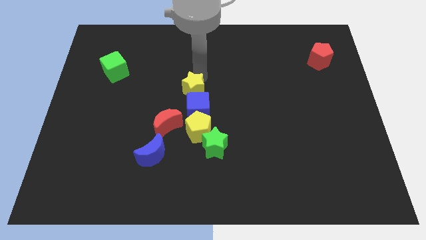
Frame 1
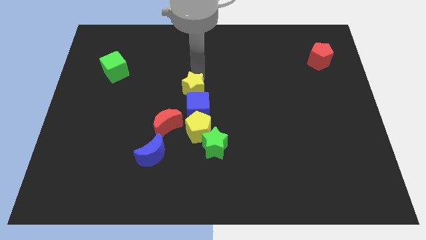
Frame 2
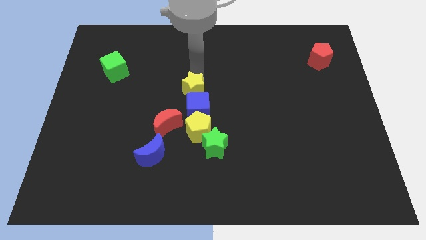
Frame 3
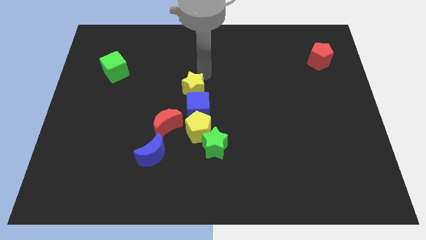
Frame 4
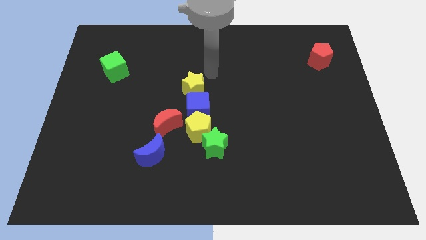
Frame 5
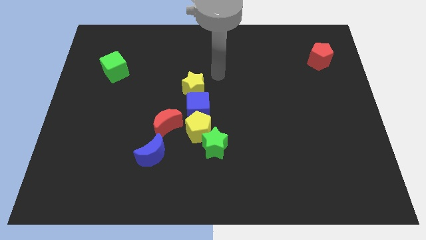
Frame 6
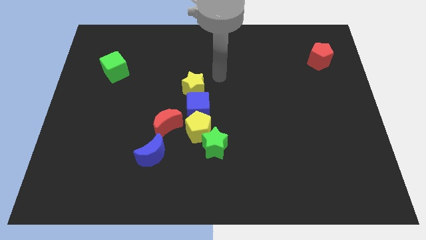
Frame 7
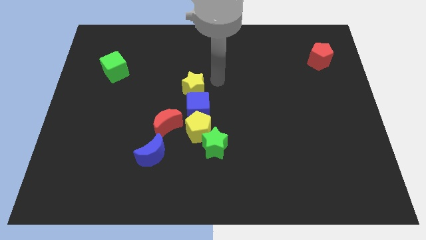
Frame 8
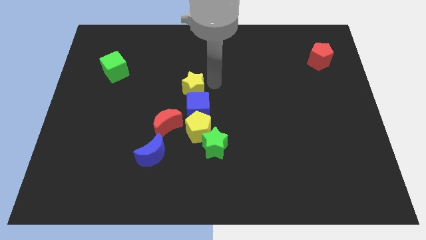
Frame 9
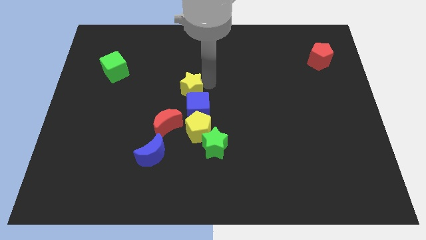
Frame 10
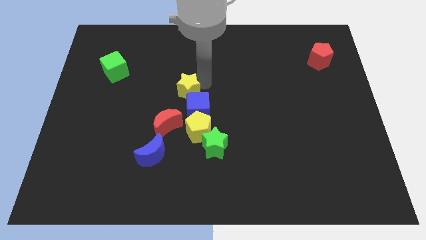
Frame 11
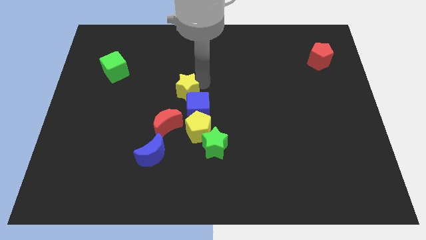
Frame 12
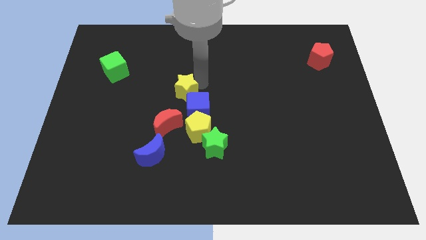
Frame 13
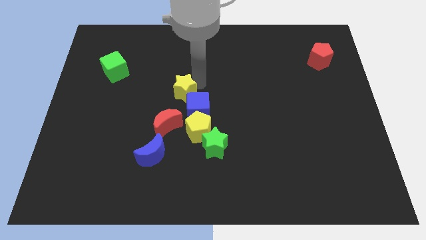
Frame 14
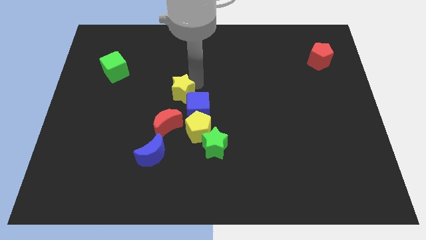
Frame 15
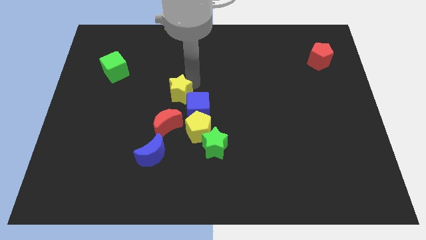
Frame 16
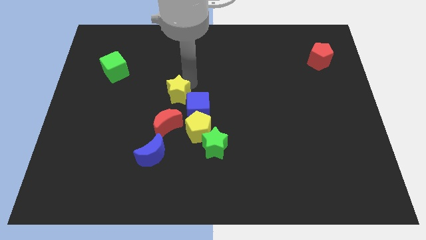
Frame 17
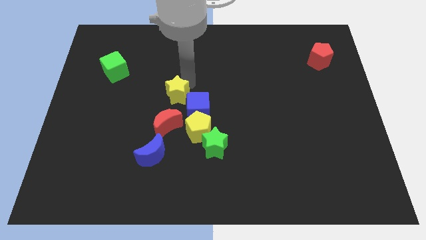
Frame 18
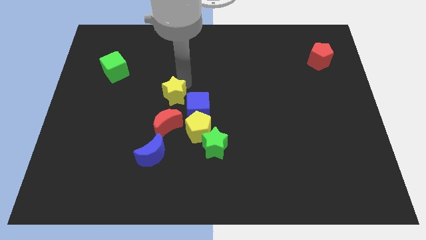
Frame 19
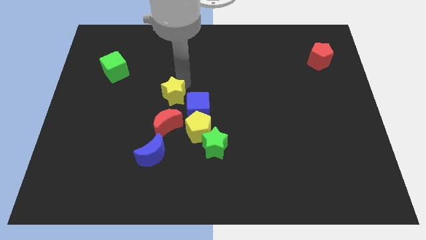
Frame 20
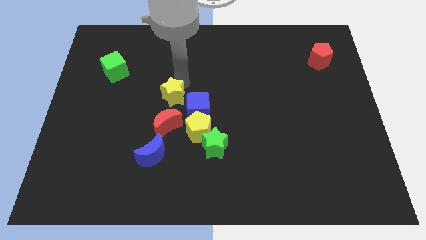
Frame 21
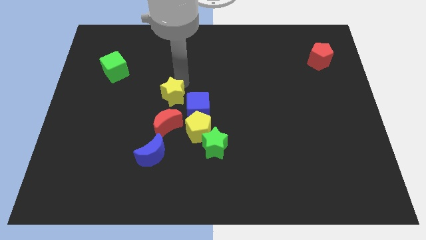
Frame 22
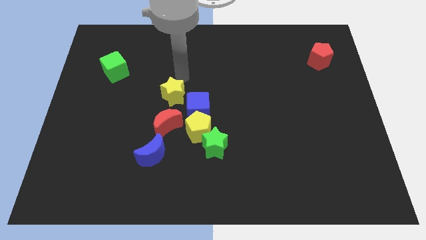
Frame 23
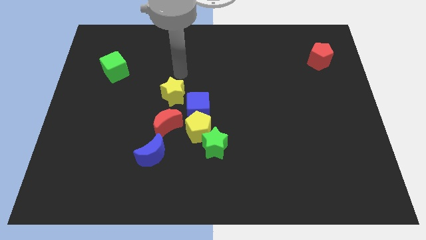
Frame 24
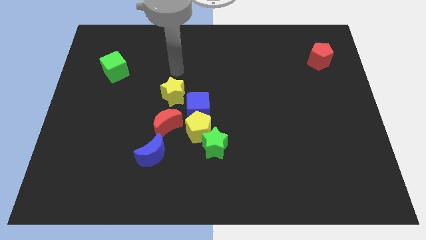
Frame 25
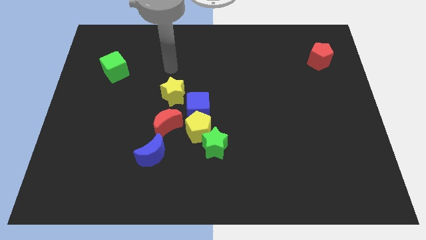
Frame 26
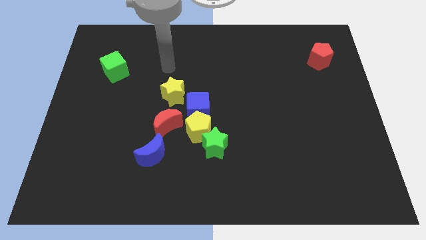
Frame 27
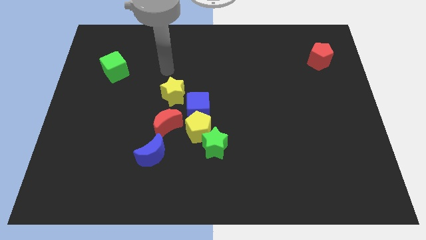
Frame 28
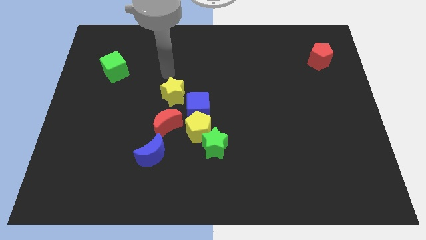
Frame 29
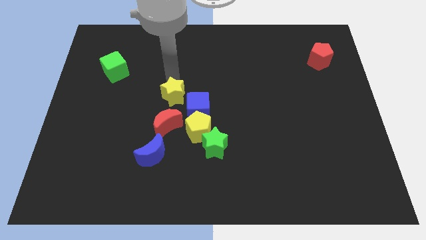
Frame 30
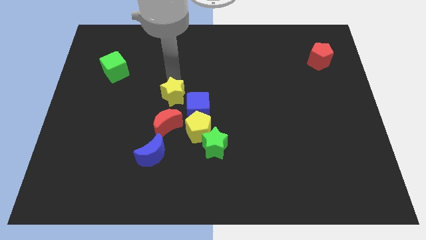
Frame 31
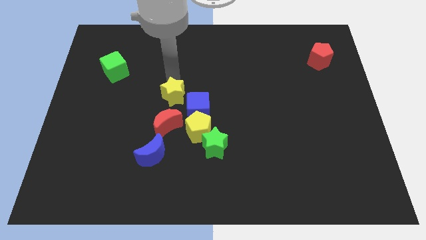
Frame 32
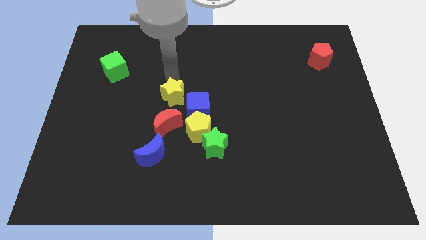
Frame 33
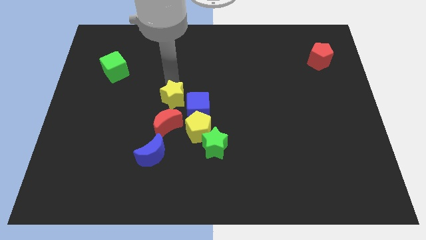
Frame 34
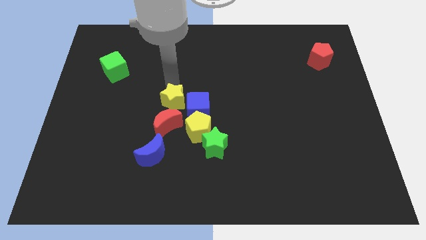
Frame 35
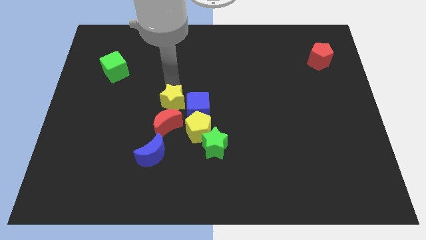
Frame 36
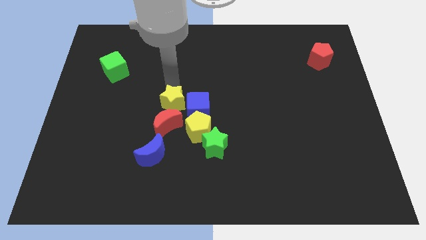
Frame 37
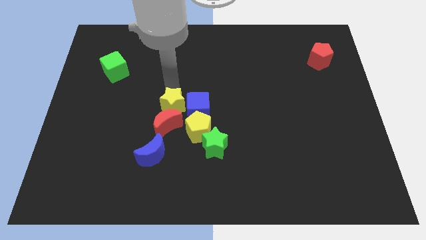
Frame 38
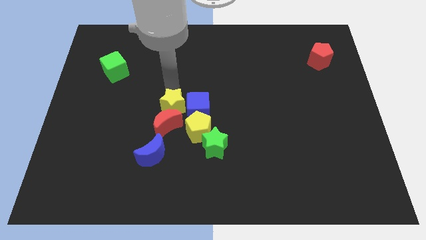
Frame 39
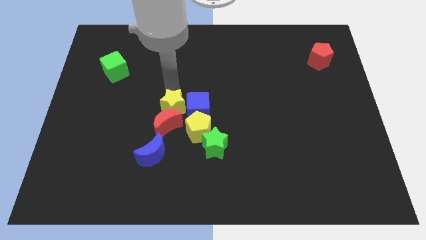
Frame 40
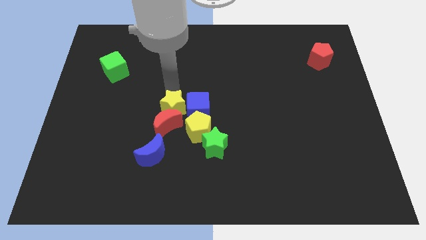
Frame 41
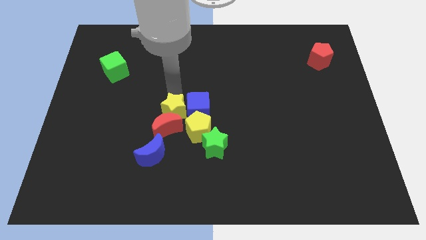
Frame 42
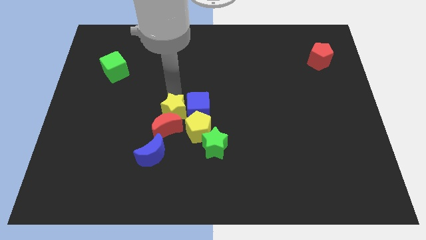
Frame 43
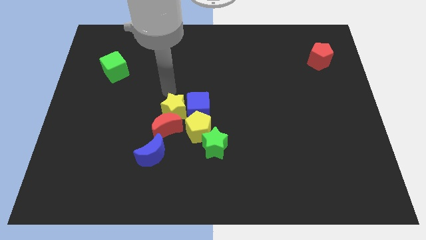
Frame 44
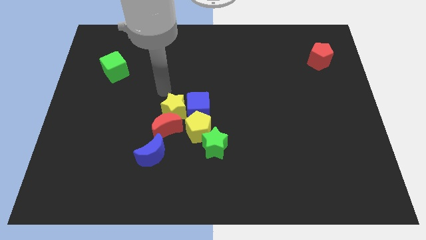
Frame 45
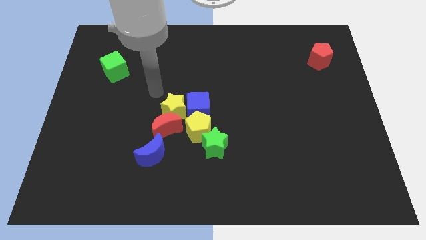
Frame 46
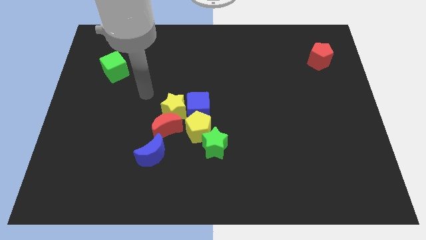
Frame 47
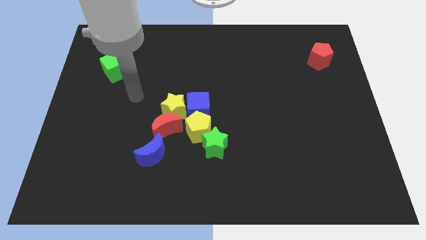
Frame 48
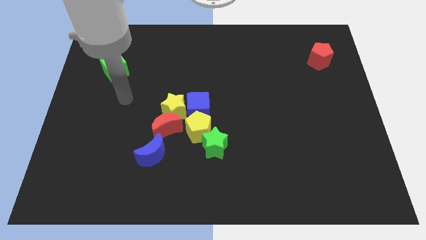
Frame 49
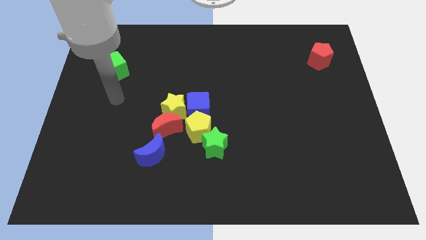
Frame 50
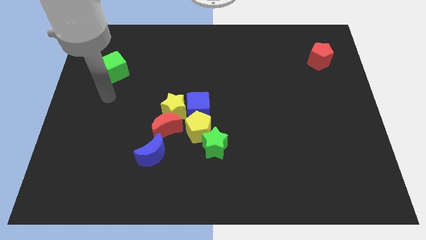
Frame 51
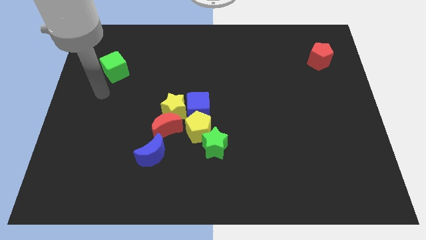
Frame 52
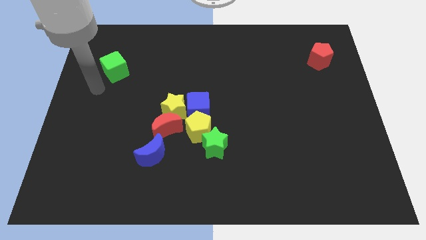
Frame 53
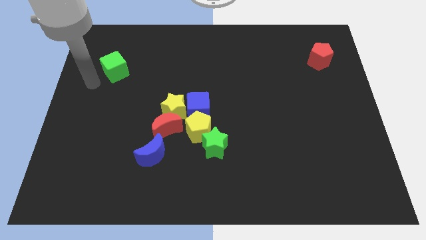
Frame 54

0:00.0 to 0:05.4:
place the yellow star left to the blue cube

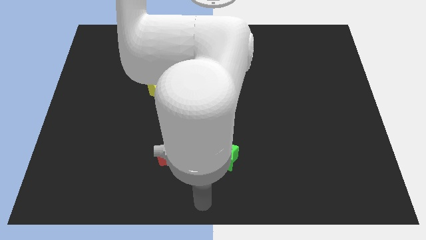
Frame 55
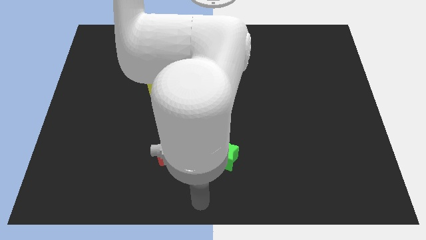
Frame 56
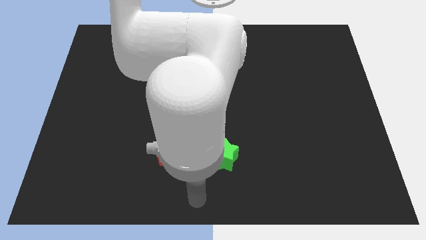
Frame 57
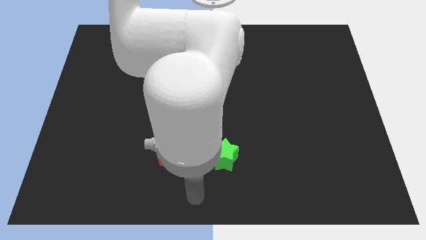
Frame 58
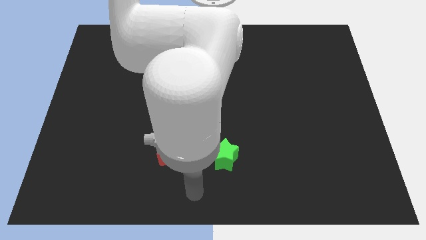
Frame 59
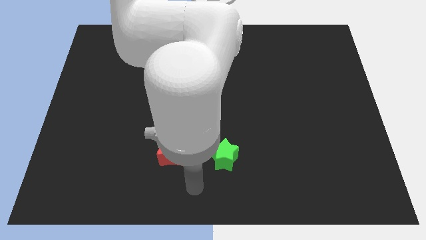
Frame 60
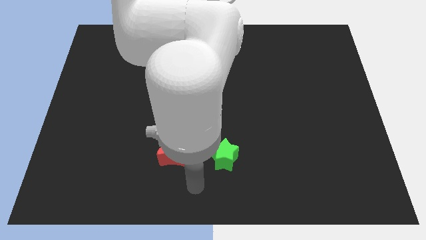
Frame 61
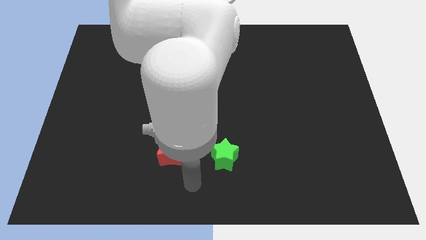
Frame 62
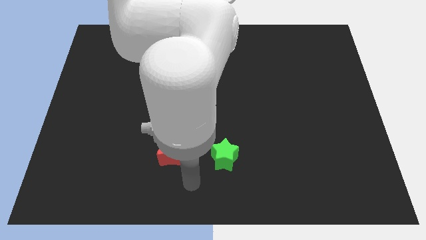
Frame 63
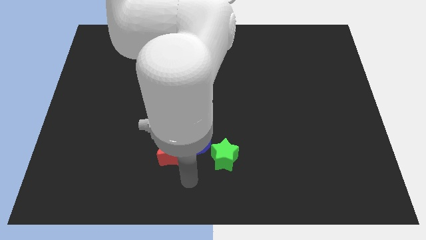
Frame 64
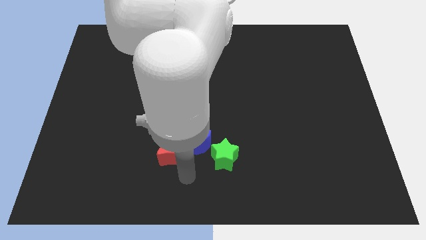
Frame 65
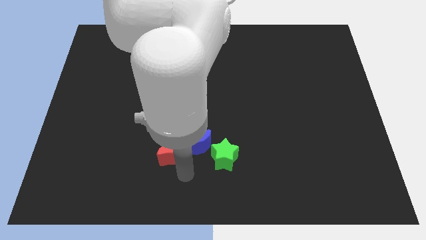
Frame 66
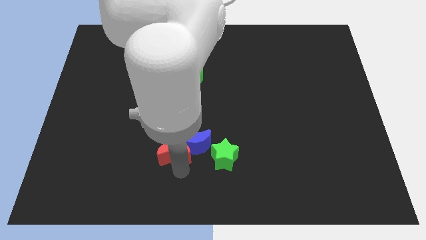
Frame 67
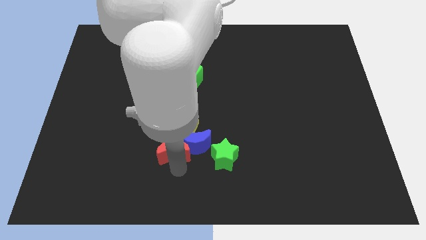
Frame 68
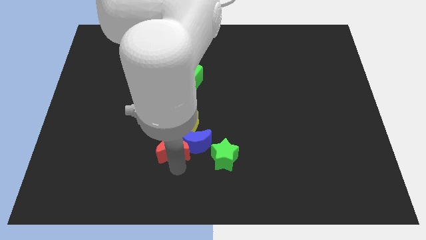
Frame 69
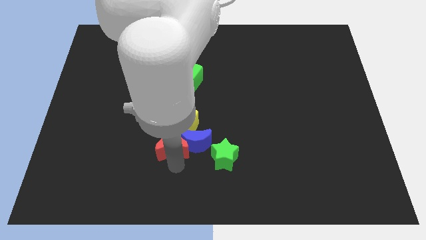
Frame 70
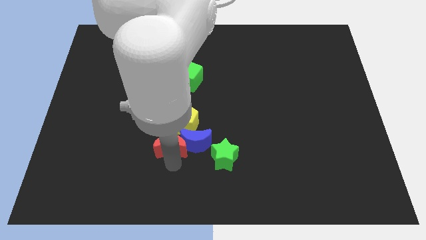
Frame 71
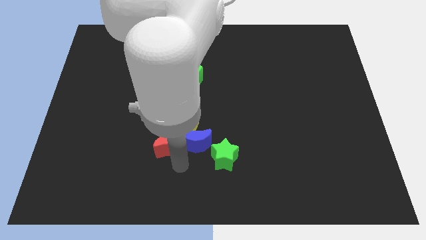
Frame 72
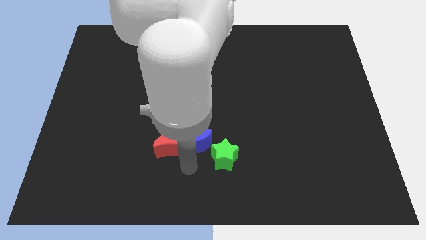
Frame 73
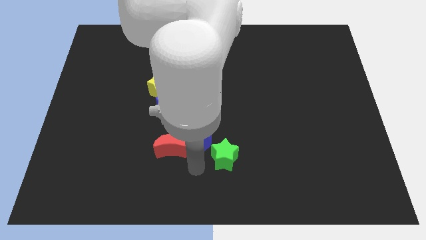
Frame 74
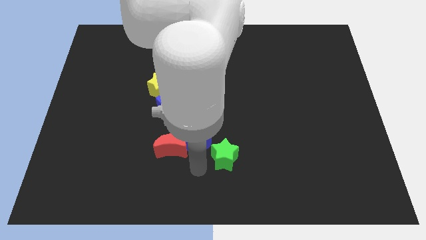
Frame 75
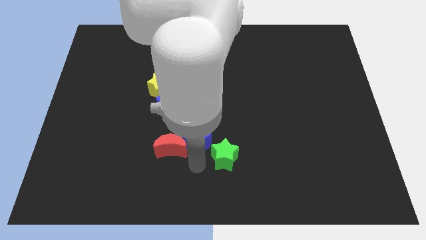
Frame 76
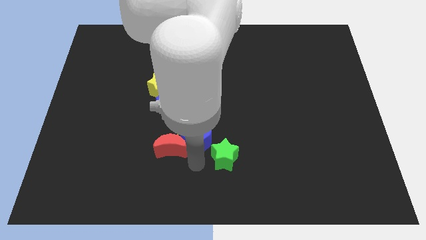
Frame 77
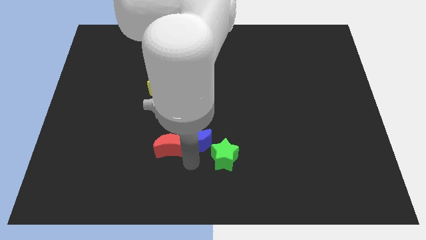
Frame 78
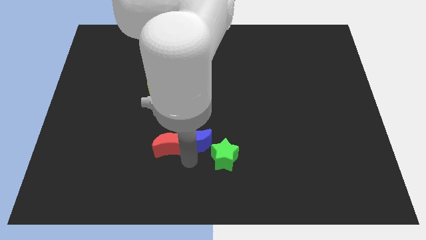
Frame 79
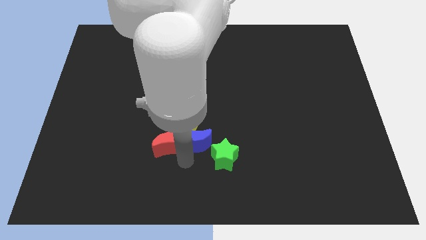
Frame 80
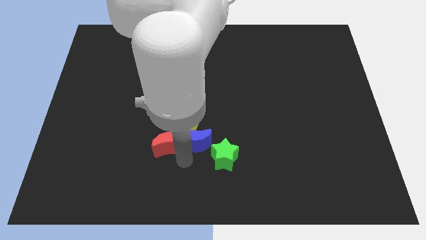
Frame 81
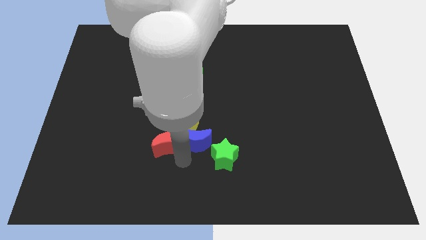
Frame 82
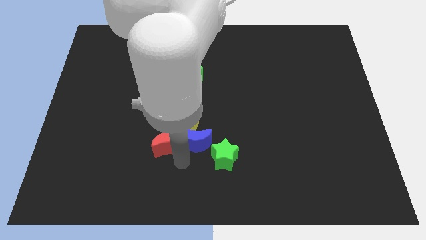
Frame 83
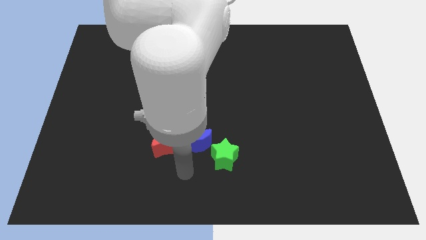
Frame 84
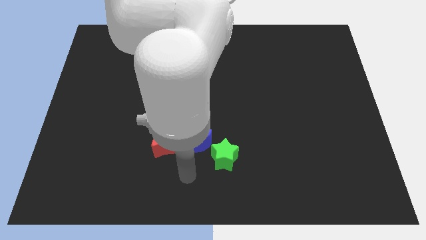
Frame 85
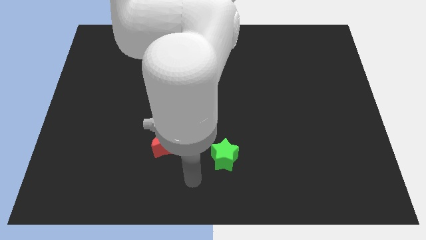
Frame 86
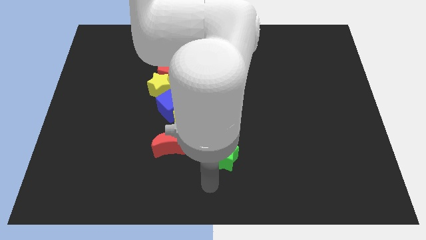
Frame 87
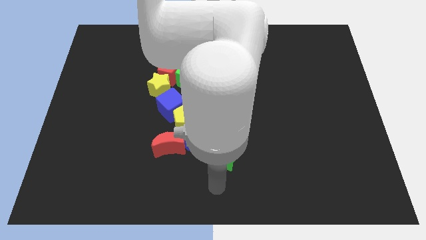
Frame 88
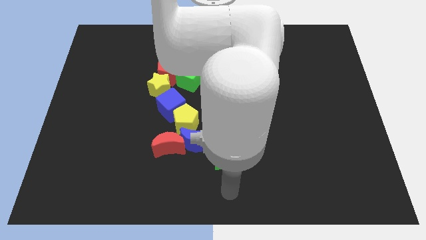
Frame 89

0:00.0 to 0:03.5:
push red moon slightly upwards
